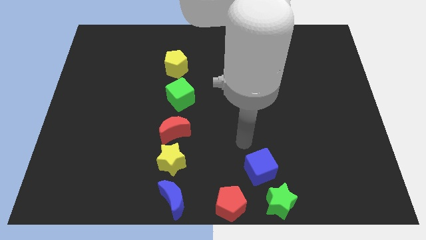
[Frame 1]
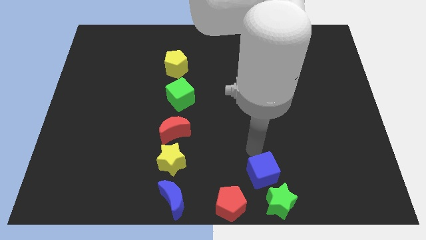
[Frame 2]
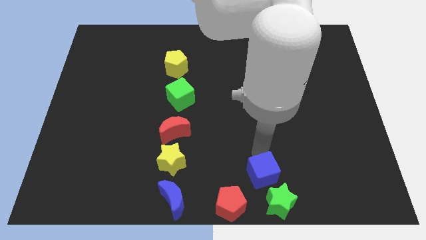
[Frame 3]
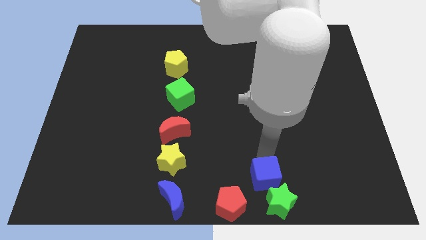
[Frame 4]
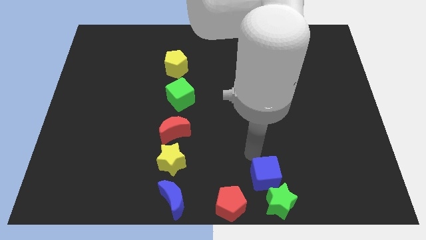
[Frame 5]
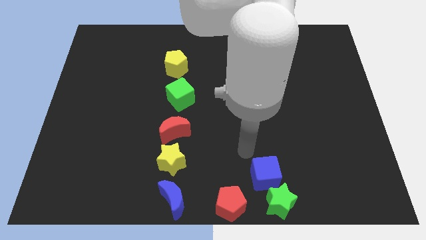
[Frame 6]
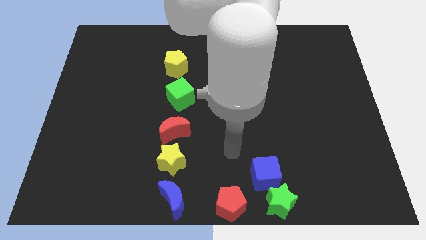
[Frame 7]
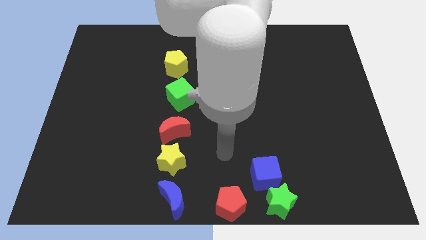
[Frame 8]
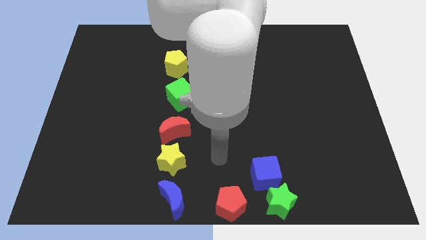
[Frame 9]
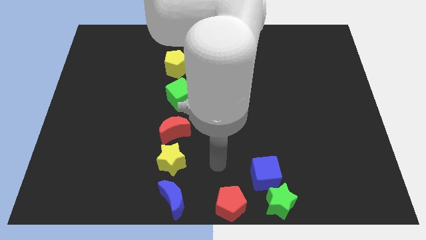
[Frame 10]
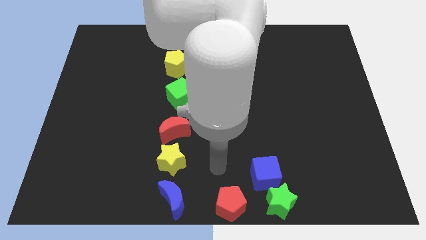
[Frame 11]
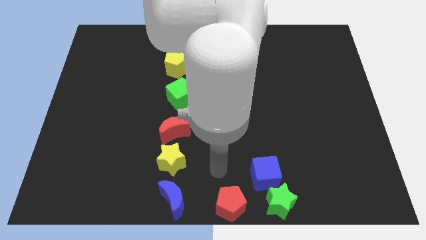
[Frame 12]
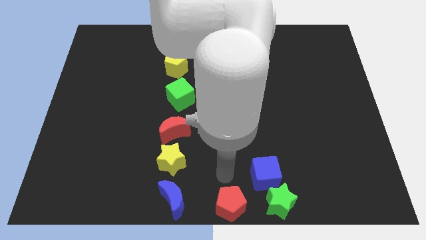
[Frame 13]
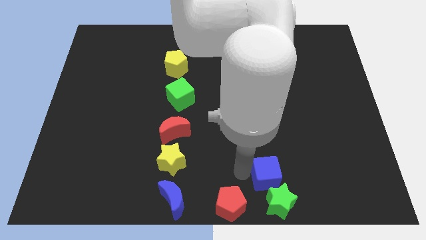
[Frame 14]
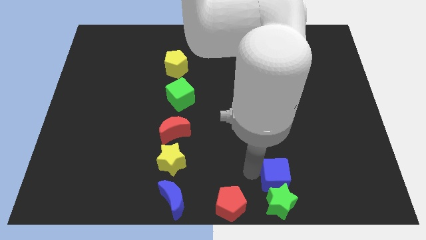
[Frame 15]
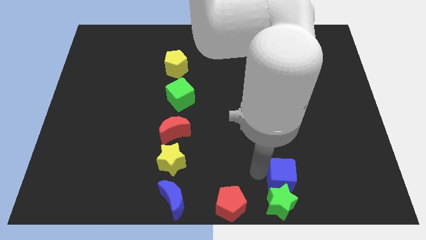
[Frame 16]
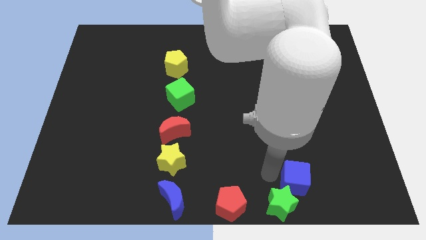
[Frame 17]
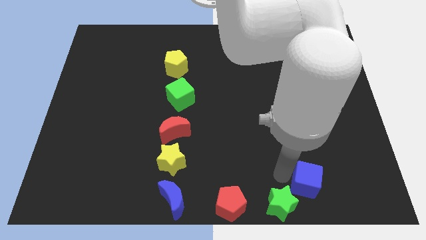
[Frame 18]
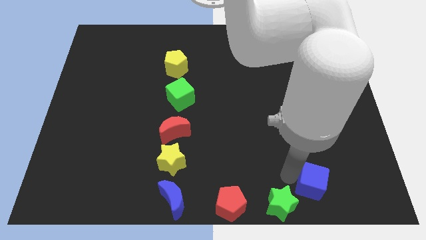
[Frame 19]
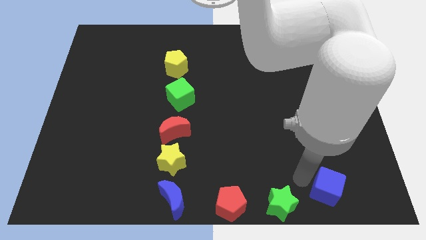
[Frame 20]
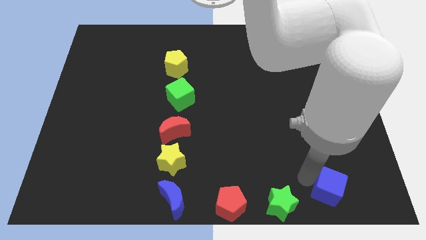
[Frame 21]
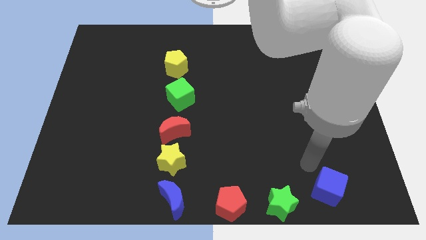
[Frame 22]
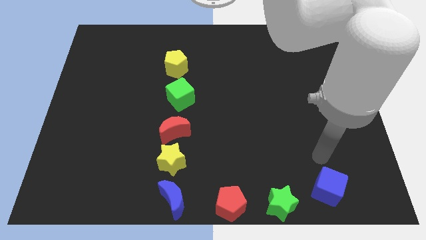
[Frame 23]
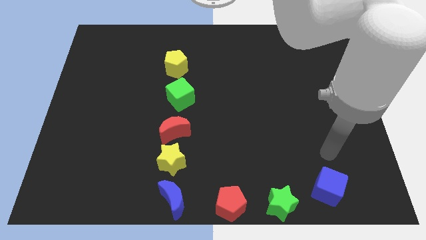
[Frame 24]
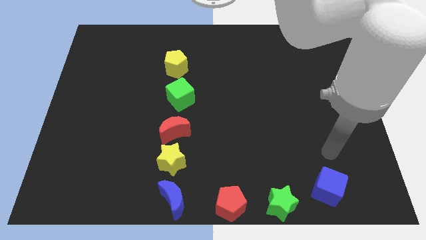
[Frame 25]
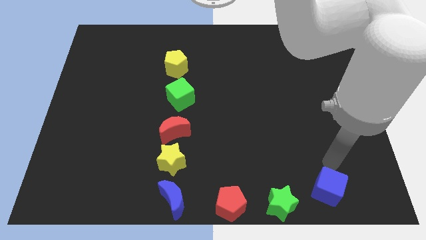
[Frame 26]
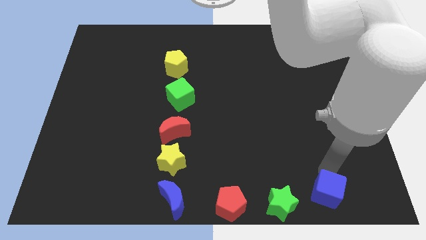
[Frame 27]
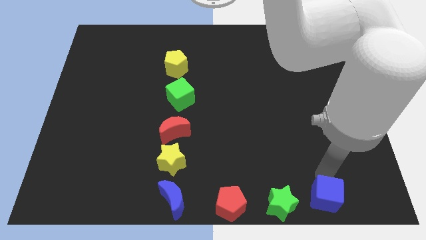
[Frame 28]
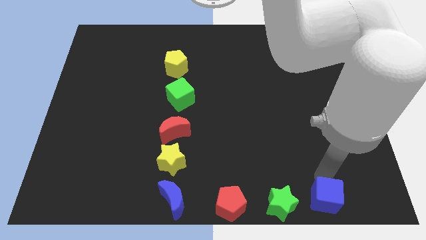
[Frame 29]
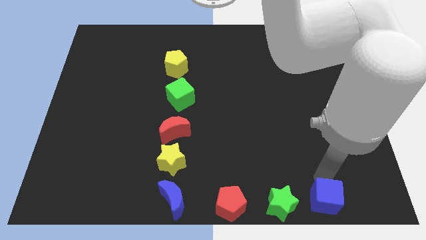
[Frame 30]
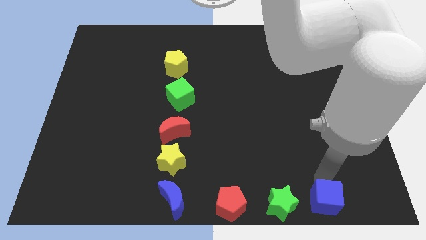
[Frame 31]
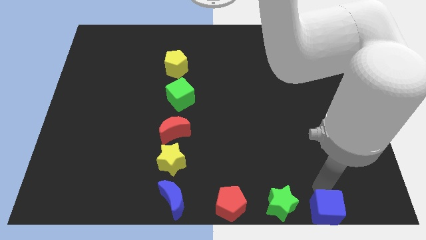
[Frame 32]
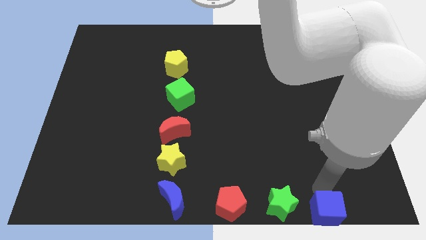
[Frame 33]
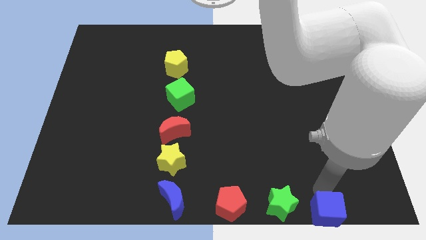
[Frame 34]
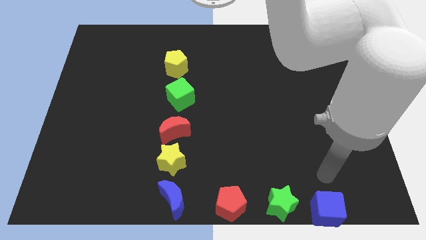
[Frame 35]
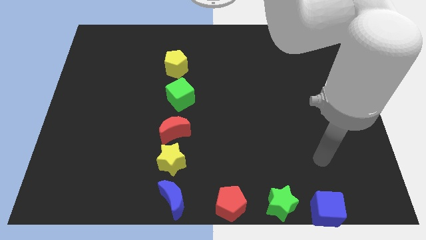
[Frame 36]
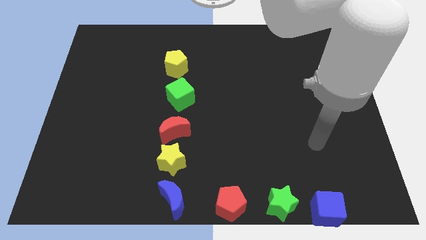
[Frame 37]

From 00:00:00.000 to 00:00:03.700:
put the blue cube to the right side of green star

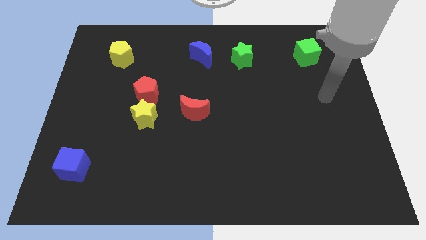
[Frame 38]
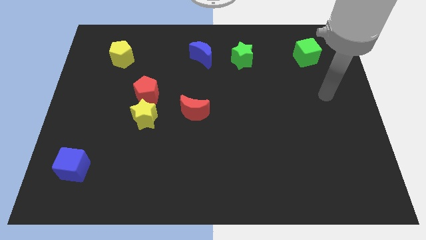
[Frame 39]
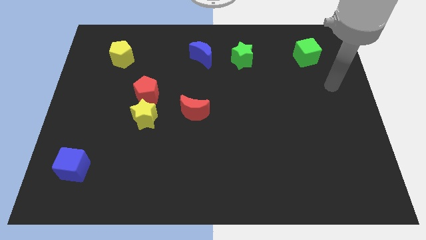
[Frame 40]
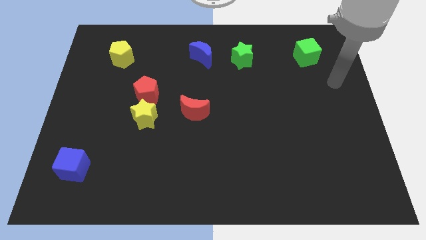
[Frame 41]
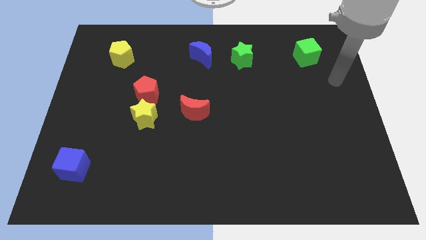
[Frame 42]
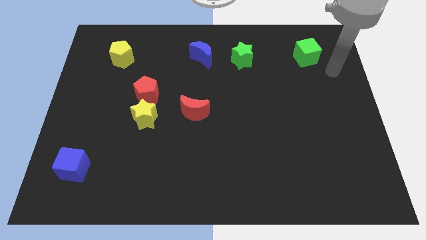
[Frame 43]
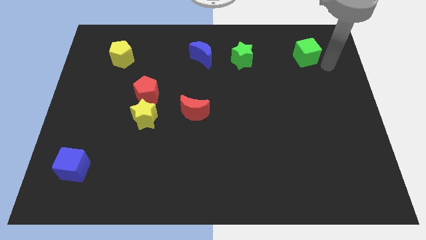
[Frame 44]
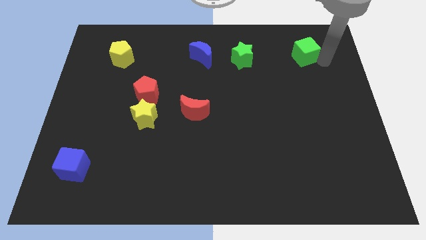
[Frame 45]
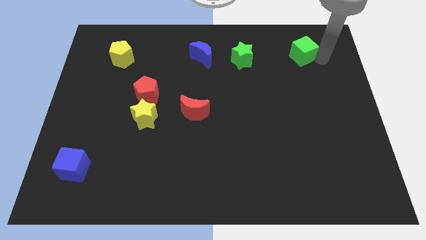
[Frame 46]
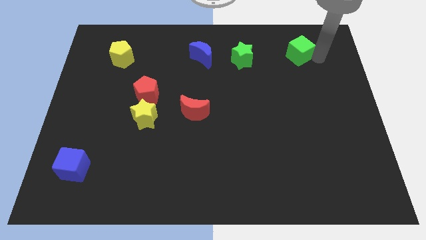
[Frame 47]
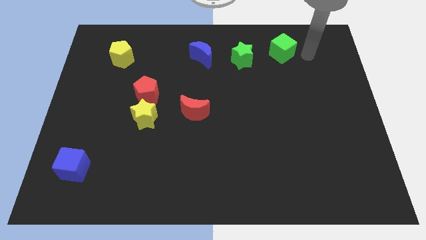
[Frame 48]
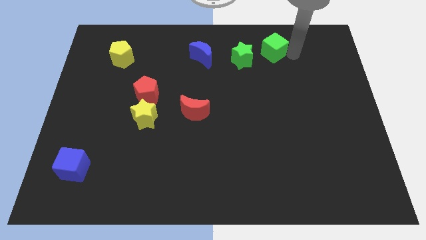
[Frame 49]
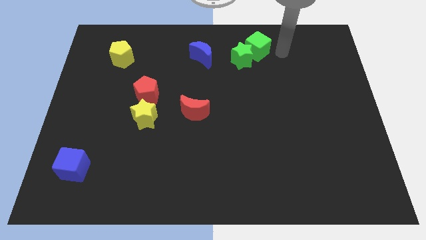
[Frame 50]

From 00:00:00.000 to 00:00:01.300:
move the green cube into the green star

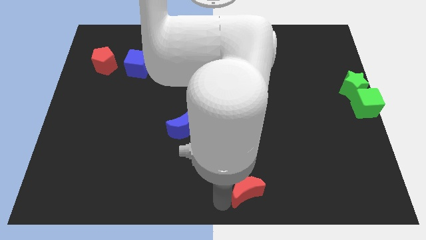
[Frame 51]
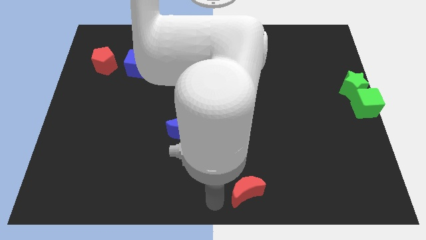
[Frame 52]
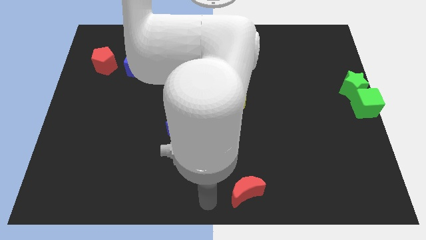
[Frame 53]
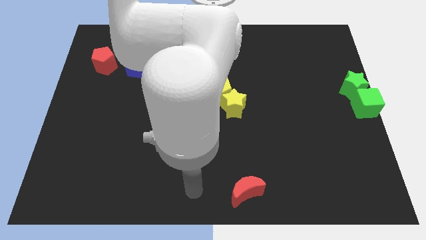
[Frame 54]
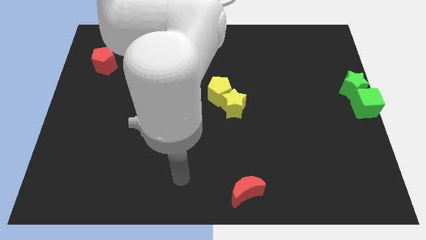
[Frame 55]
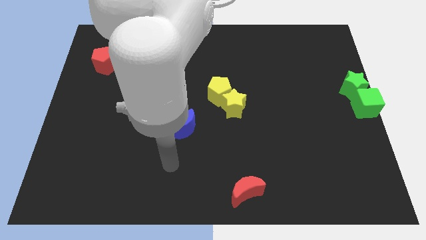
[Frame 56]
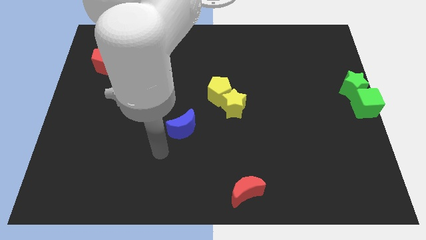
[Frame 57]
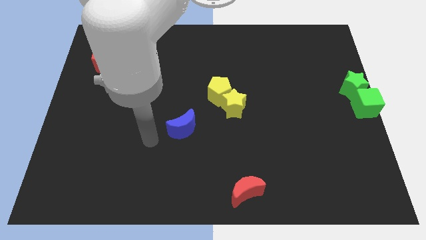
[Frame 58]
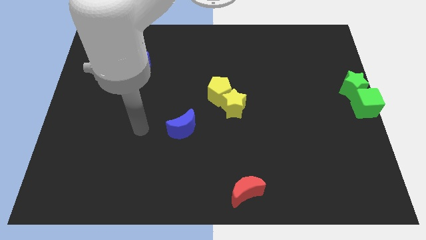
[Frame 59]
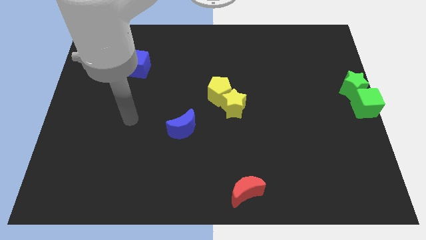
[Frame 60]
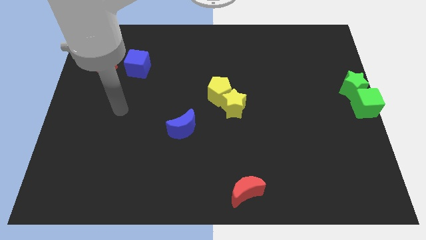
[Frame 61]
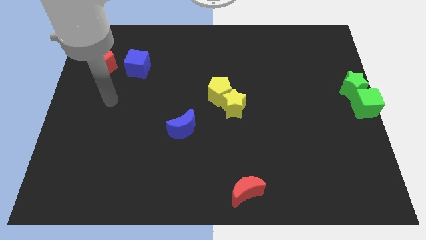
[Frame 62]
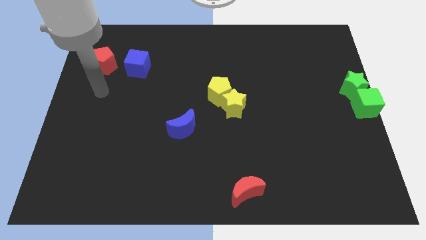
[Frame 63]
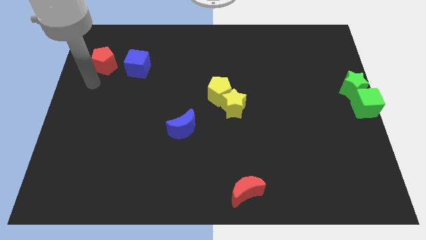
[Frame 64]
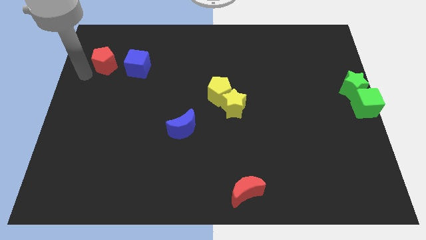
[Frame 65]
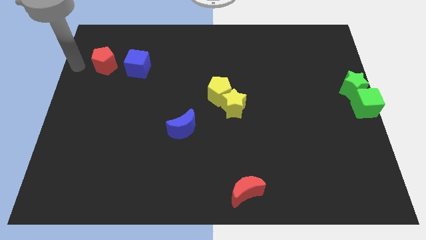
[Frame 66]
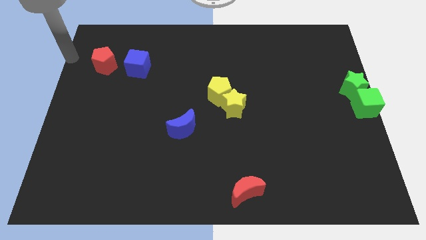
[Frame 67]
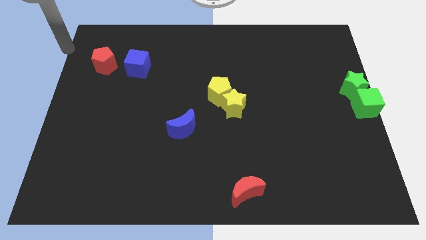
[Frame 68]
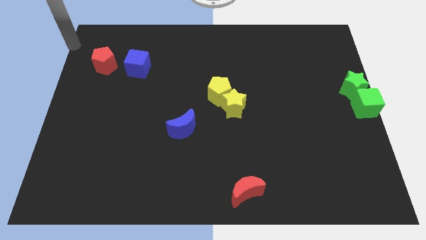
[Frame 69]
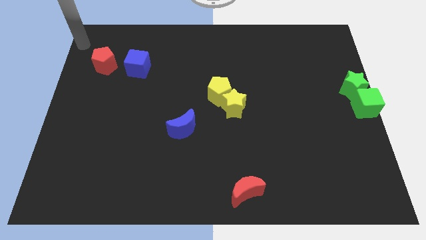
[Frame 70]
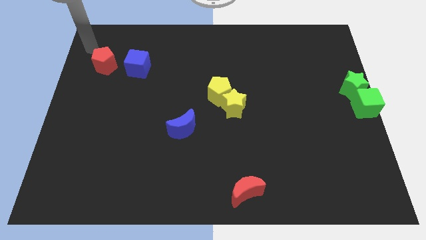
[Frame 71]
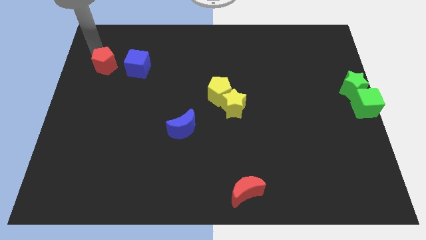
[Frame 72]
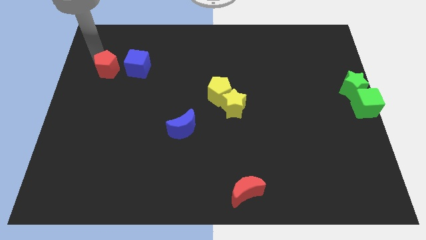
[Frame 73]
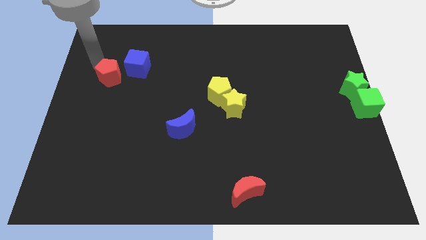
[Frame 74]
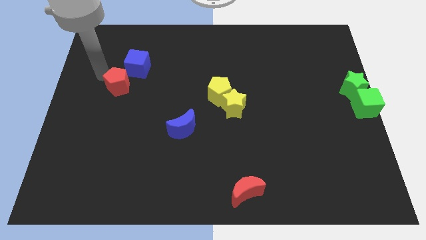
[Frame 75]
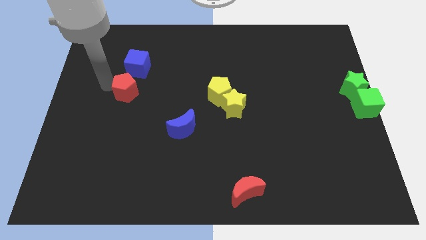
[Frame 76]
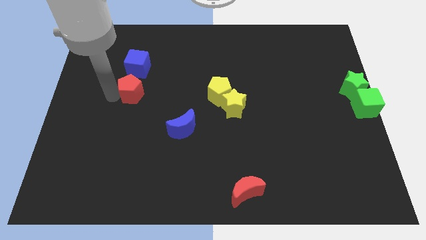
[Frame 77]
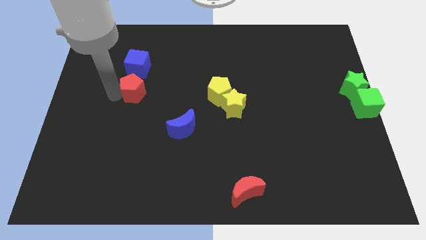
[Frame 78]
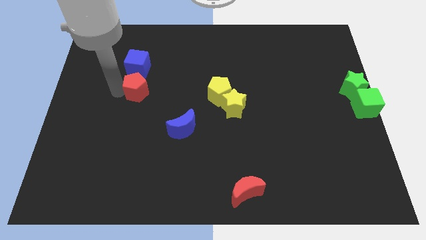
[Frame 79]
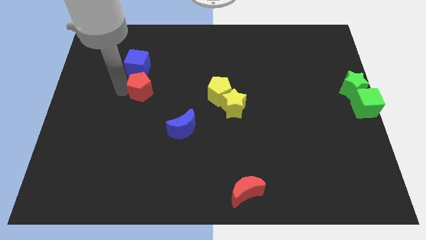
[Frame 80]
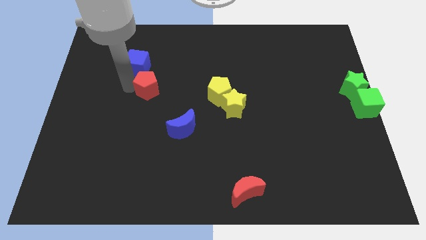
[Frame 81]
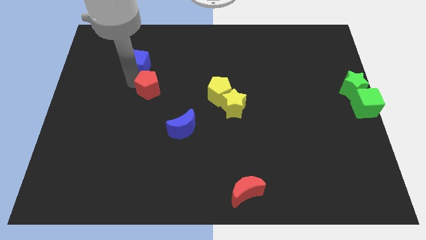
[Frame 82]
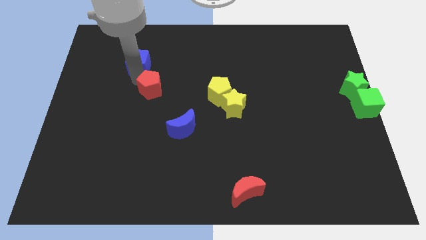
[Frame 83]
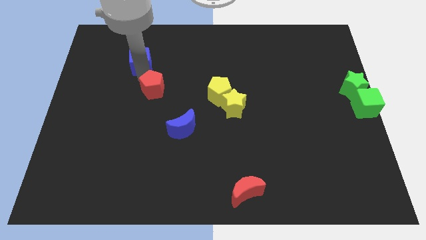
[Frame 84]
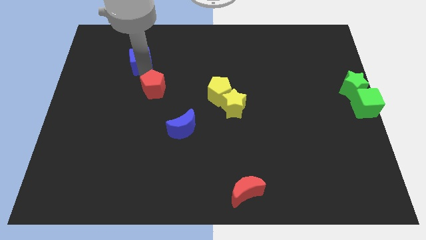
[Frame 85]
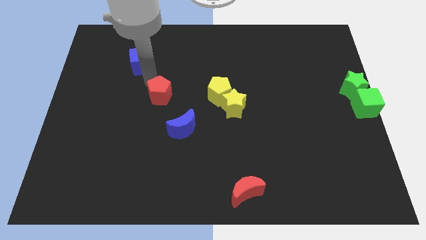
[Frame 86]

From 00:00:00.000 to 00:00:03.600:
move the red pentagon in between the blue cube and blue crescent

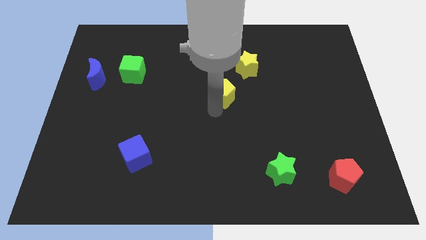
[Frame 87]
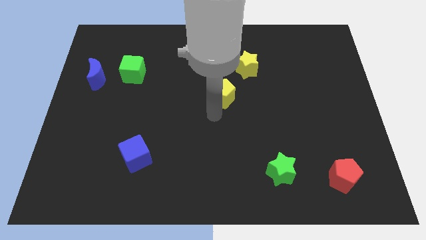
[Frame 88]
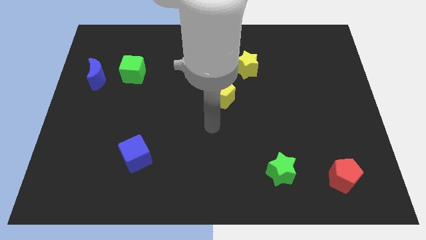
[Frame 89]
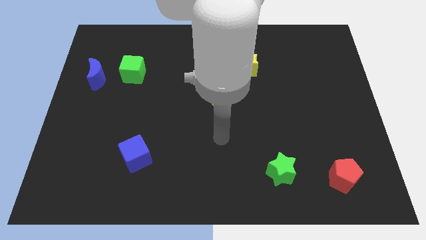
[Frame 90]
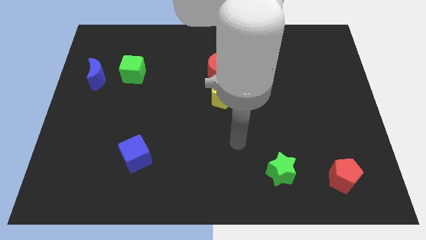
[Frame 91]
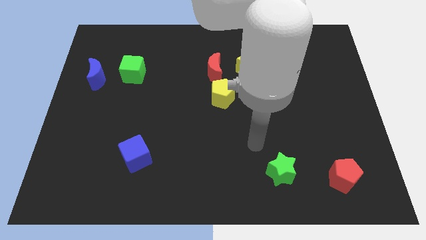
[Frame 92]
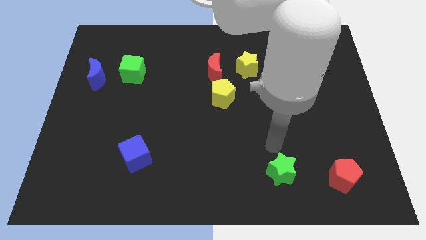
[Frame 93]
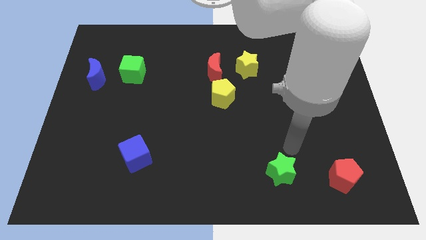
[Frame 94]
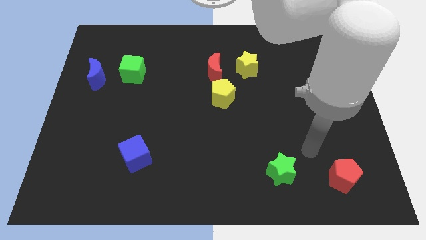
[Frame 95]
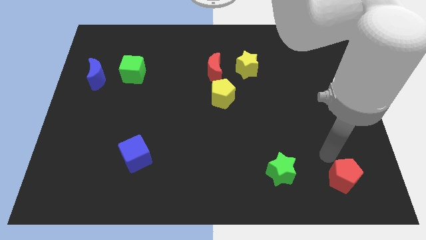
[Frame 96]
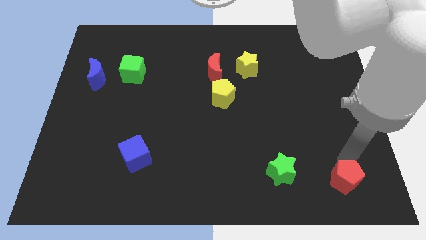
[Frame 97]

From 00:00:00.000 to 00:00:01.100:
point your arm at the top of the red pentagon
